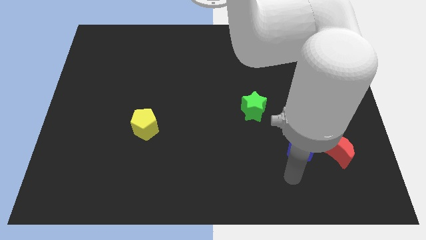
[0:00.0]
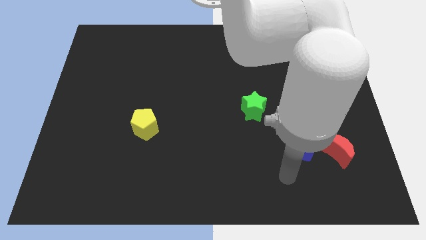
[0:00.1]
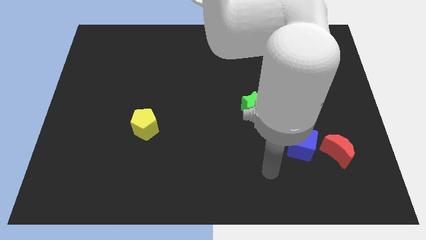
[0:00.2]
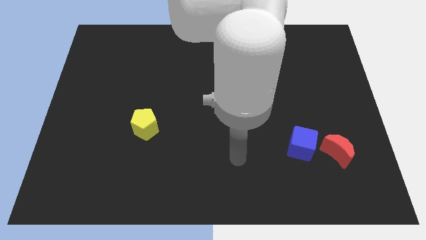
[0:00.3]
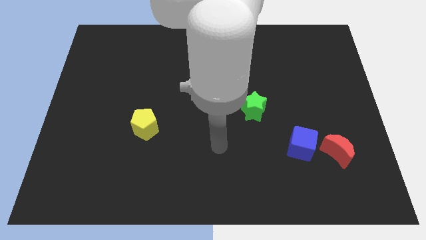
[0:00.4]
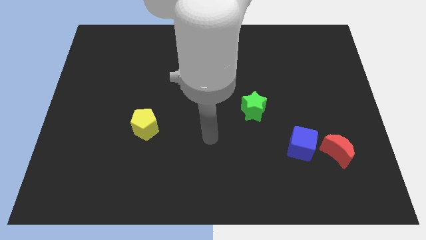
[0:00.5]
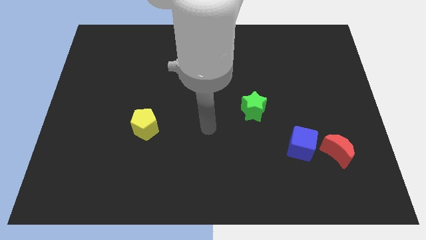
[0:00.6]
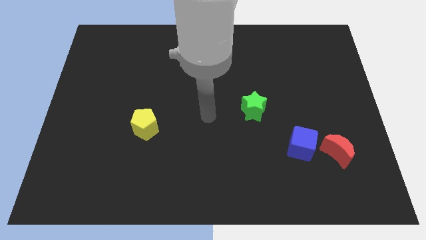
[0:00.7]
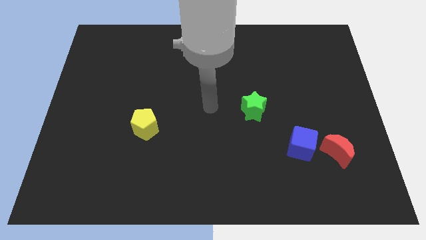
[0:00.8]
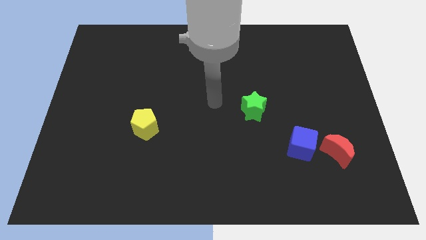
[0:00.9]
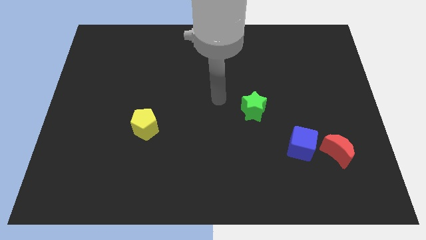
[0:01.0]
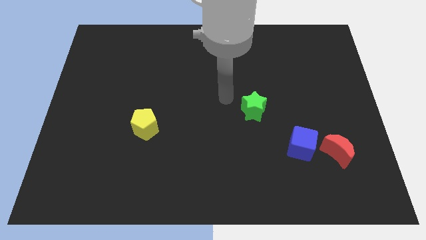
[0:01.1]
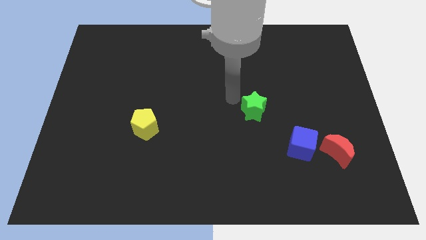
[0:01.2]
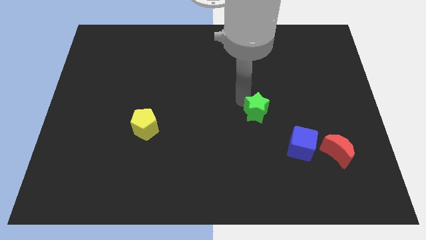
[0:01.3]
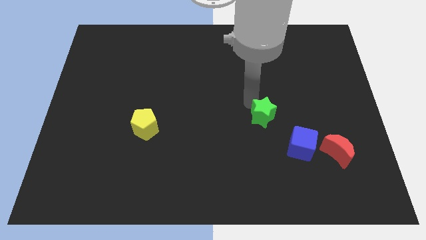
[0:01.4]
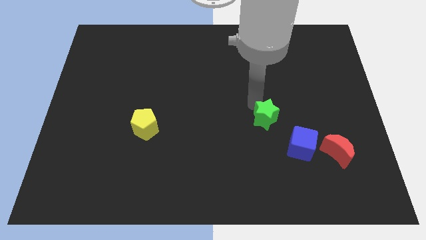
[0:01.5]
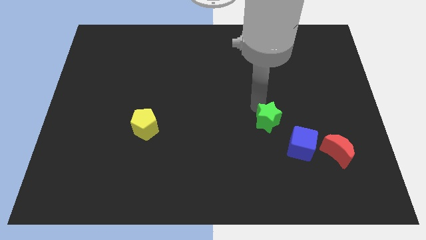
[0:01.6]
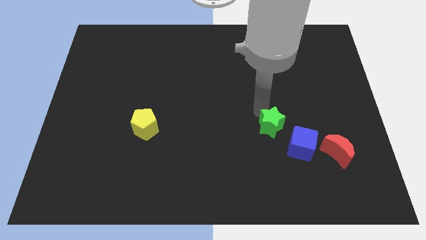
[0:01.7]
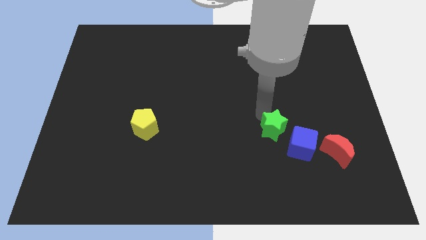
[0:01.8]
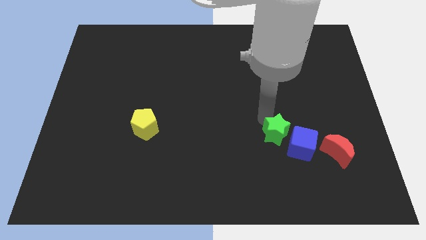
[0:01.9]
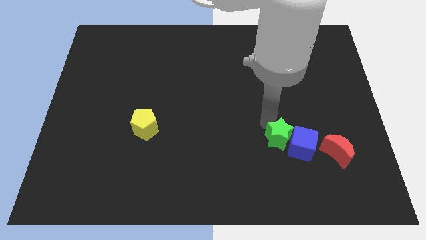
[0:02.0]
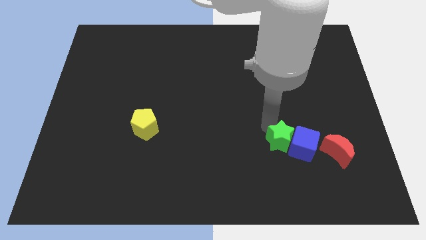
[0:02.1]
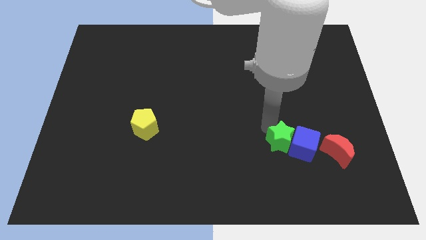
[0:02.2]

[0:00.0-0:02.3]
slide the green star next to the blue block

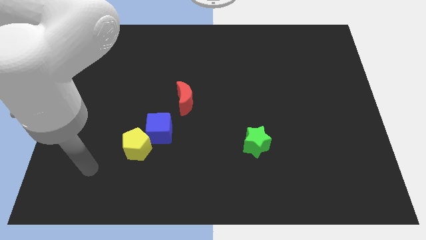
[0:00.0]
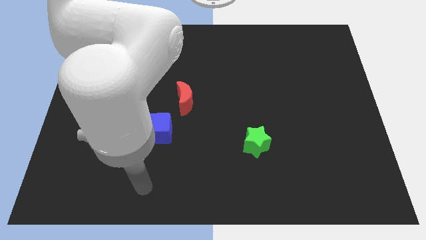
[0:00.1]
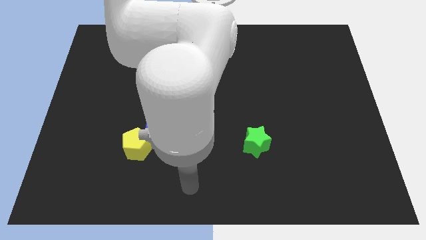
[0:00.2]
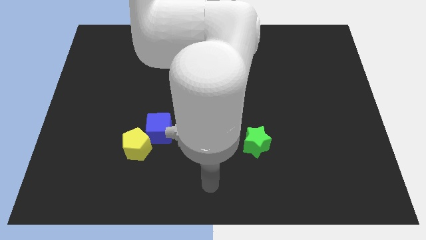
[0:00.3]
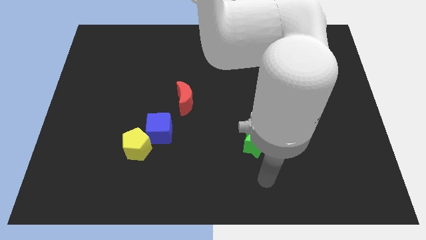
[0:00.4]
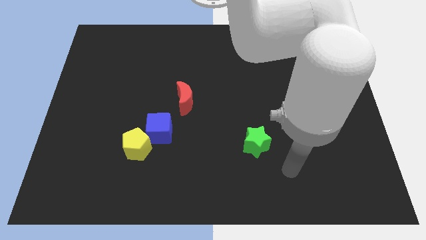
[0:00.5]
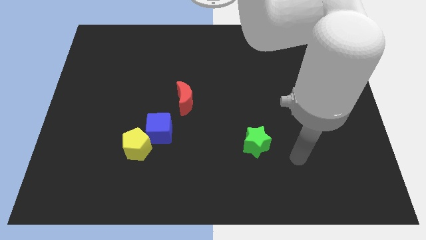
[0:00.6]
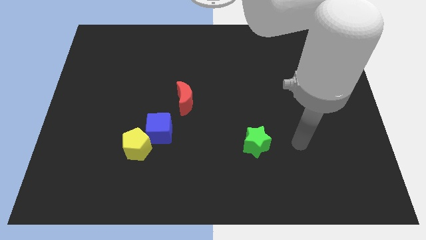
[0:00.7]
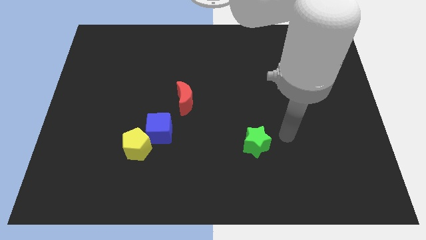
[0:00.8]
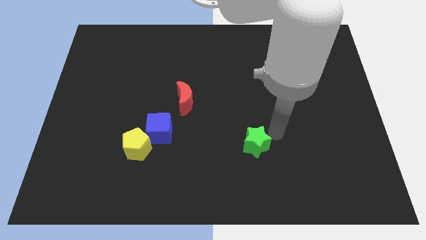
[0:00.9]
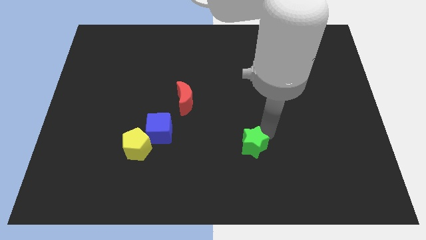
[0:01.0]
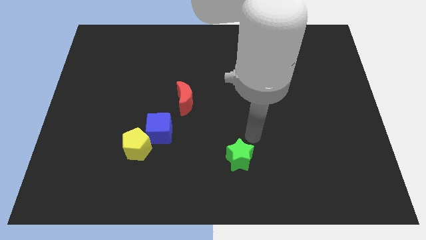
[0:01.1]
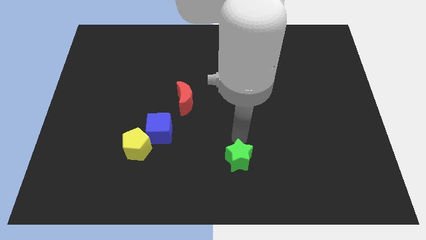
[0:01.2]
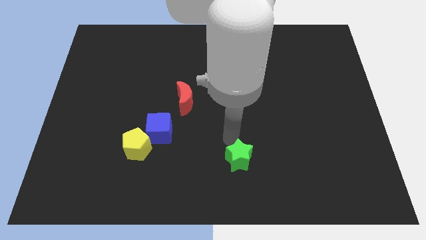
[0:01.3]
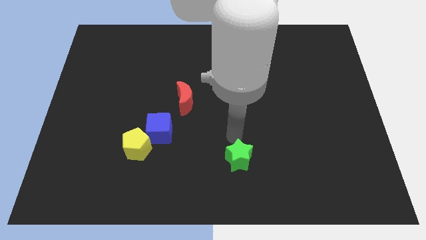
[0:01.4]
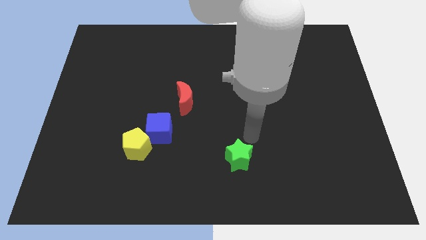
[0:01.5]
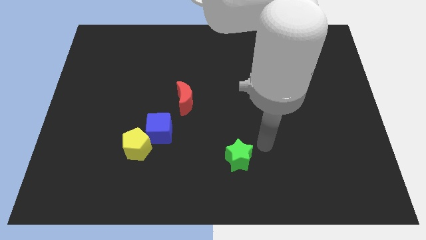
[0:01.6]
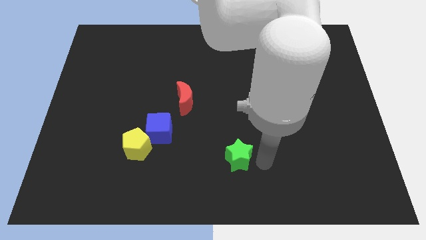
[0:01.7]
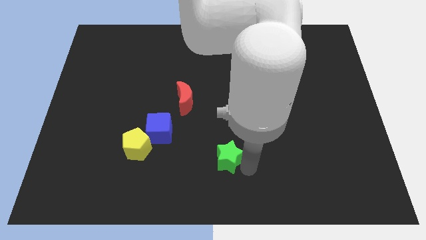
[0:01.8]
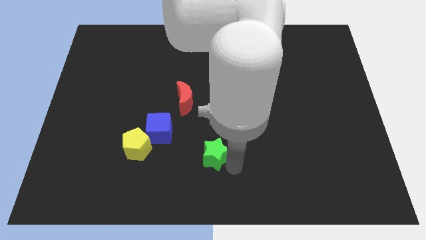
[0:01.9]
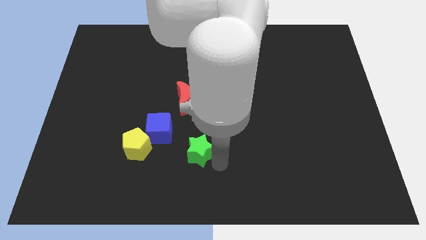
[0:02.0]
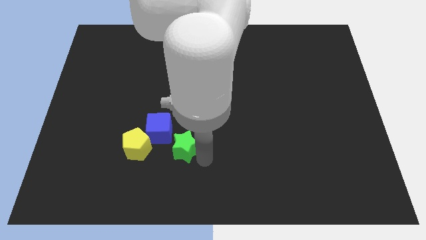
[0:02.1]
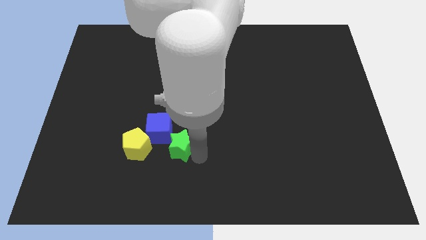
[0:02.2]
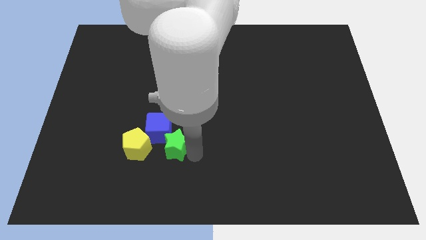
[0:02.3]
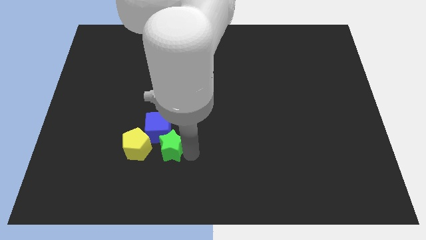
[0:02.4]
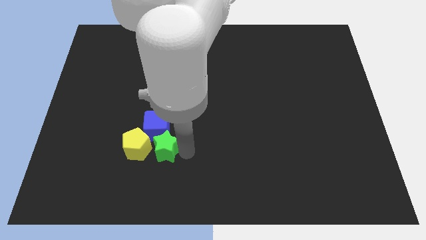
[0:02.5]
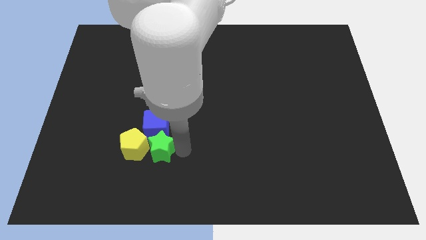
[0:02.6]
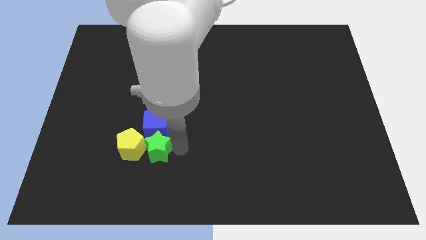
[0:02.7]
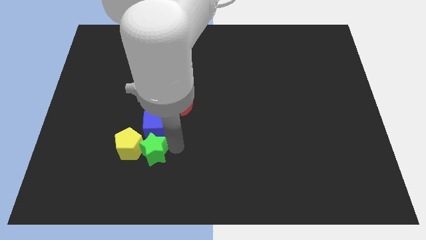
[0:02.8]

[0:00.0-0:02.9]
push the star towards the yellow block

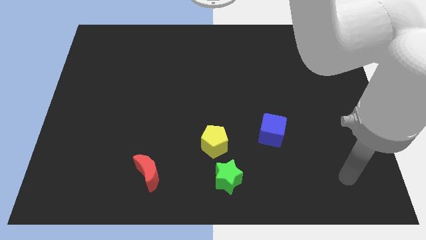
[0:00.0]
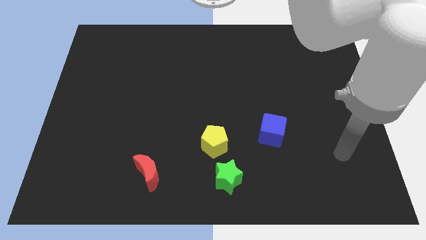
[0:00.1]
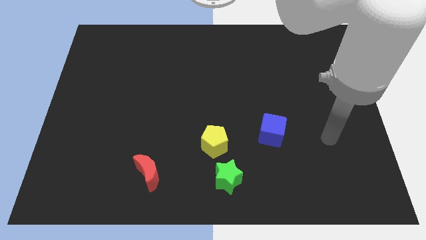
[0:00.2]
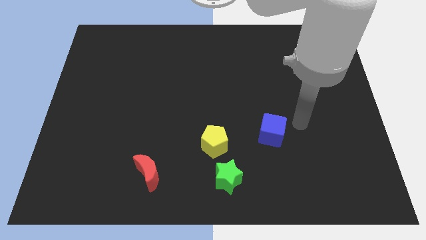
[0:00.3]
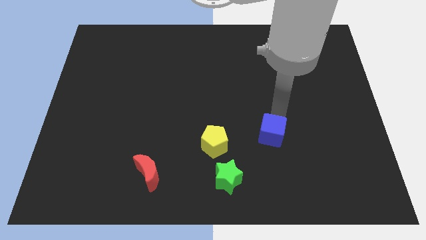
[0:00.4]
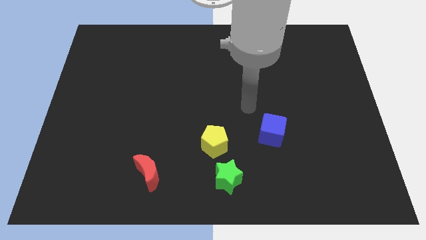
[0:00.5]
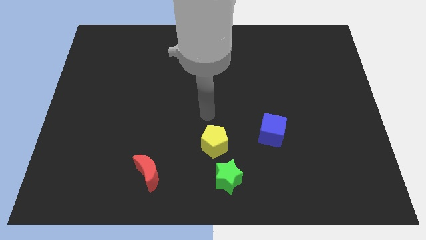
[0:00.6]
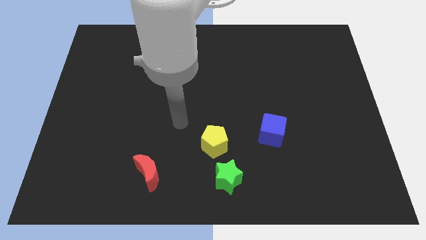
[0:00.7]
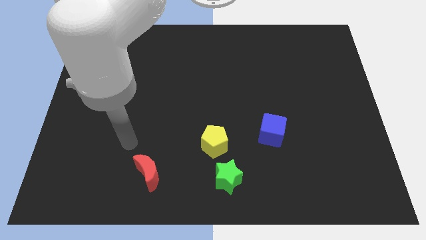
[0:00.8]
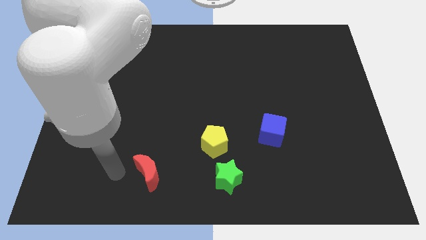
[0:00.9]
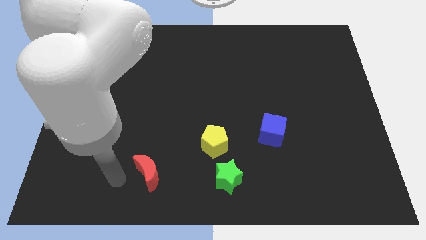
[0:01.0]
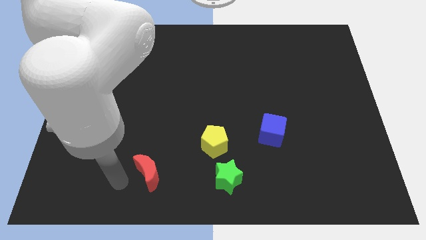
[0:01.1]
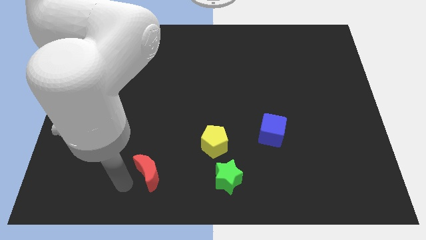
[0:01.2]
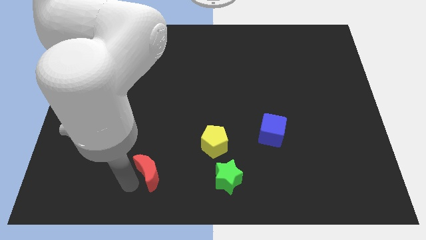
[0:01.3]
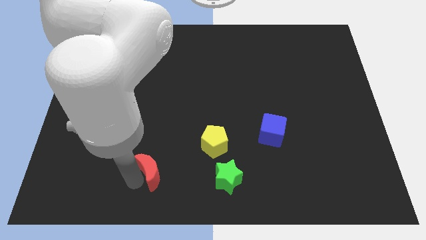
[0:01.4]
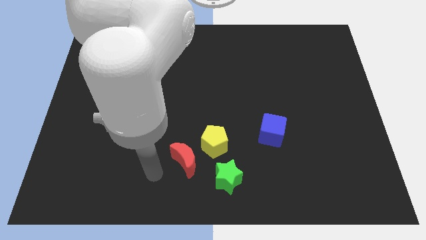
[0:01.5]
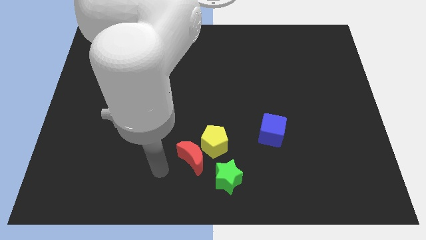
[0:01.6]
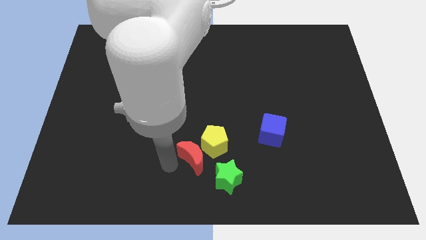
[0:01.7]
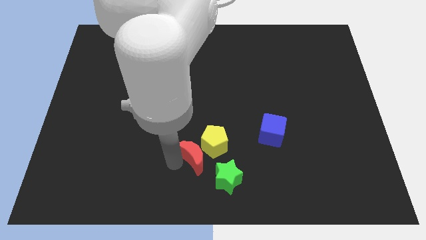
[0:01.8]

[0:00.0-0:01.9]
push the moon next to the yellow pentagon

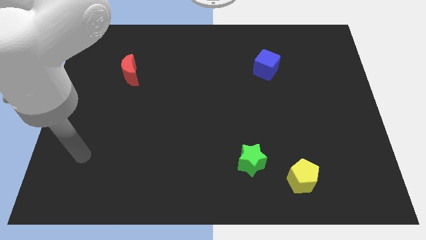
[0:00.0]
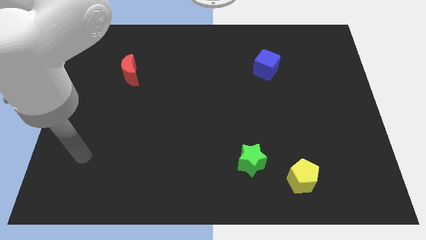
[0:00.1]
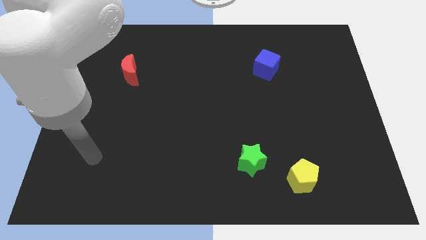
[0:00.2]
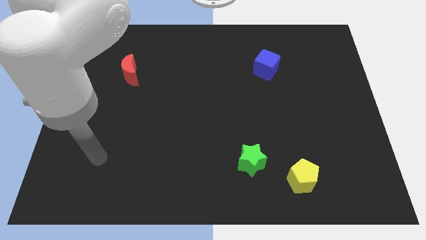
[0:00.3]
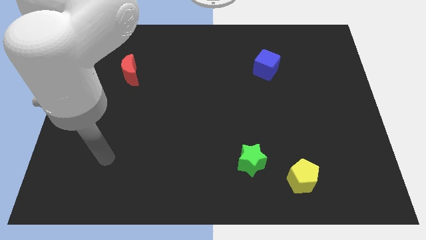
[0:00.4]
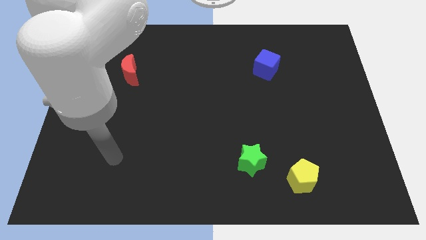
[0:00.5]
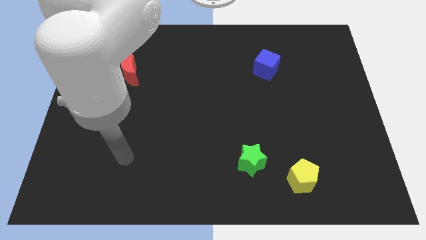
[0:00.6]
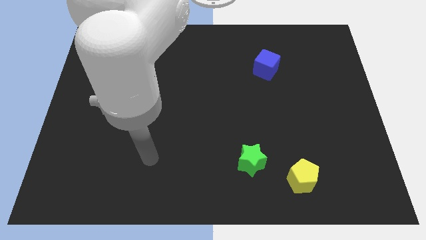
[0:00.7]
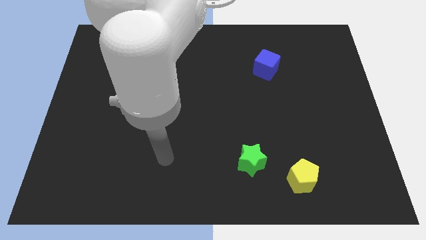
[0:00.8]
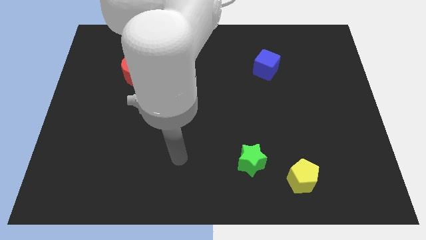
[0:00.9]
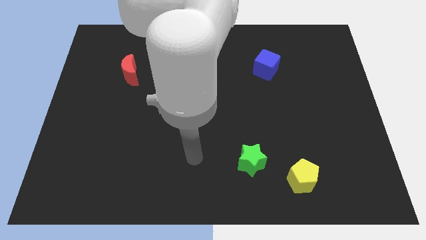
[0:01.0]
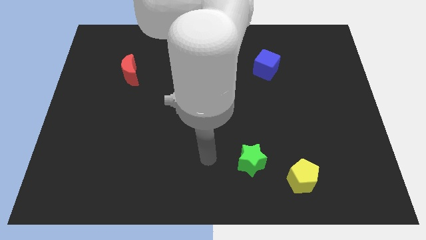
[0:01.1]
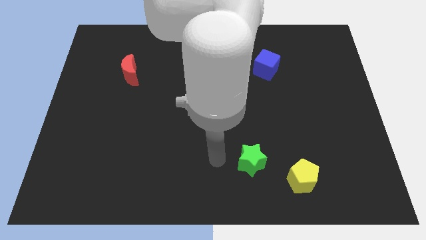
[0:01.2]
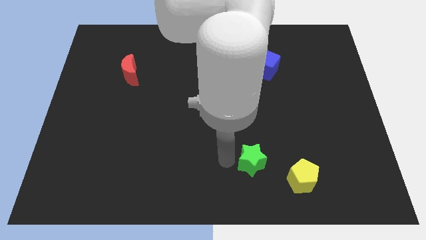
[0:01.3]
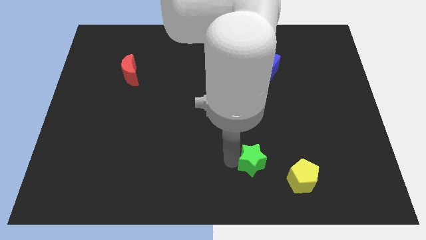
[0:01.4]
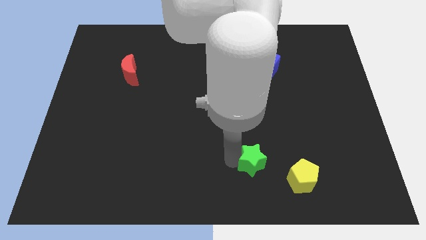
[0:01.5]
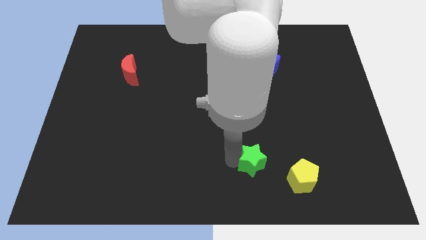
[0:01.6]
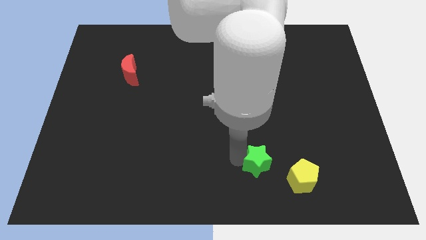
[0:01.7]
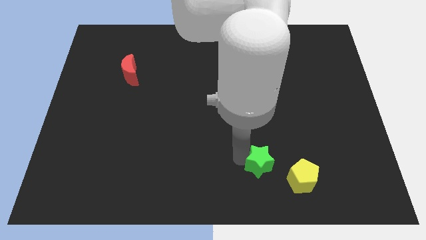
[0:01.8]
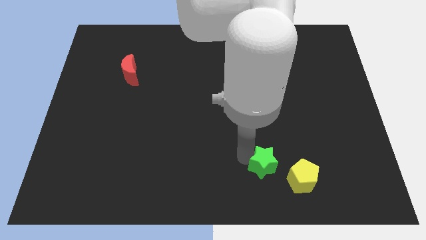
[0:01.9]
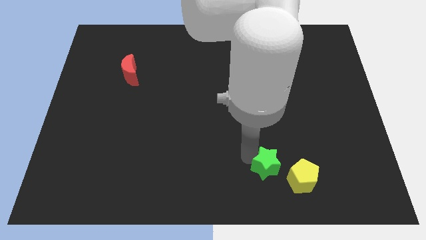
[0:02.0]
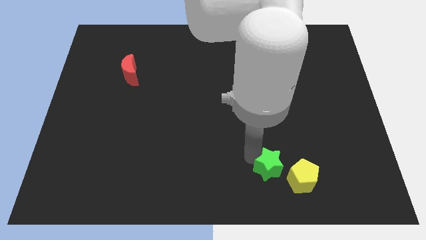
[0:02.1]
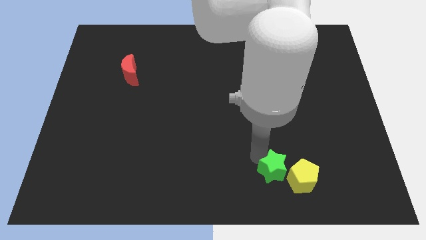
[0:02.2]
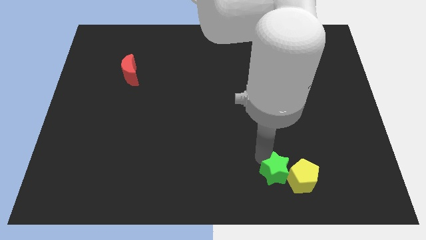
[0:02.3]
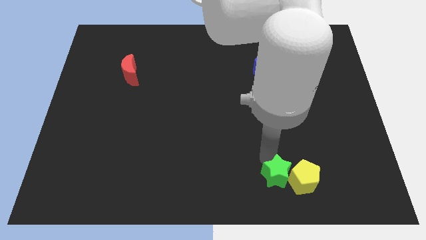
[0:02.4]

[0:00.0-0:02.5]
push the green block next to the yellow block
